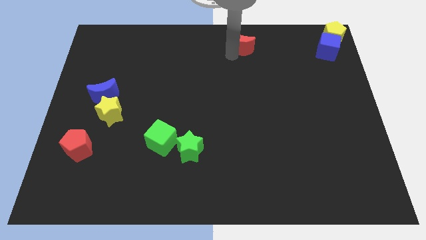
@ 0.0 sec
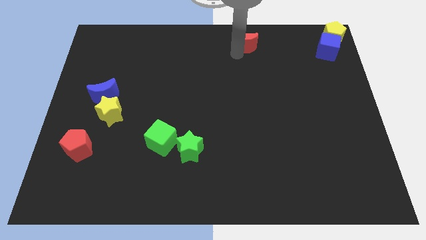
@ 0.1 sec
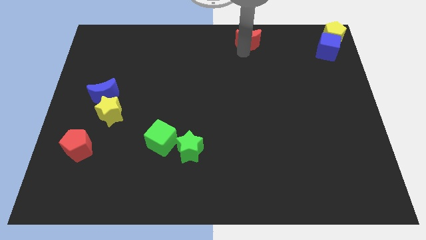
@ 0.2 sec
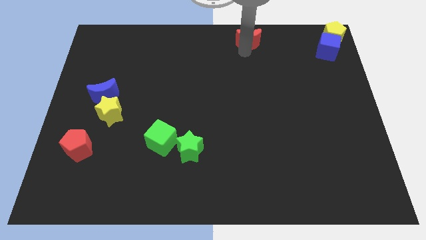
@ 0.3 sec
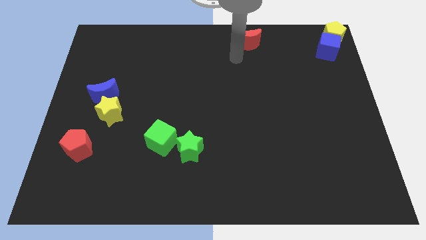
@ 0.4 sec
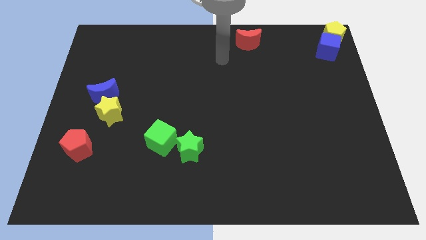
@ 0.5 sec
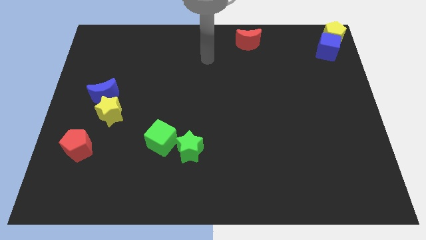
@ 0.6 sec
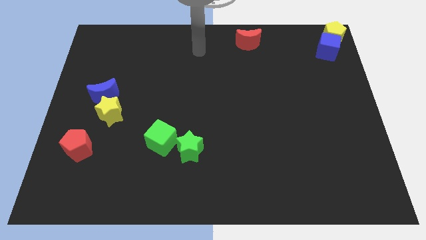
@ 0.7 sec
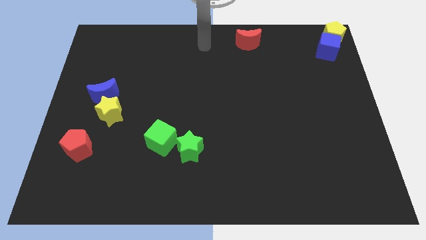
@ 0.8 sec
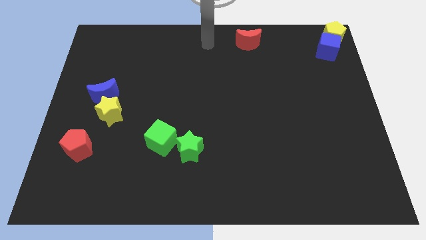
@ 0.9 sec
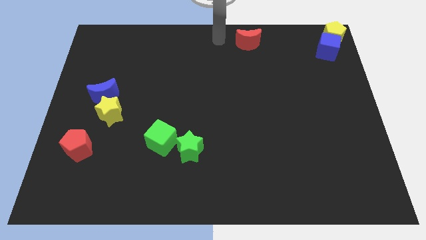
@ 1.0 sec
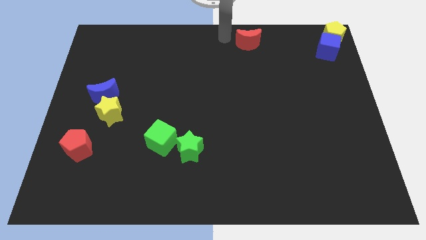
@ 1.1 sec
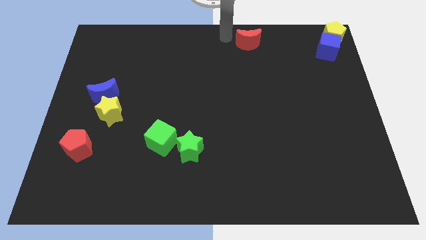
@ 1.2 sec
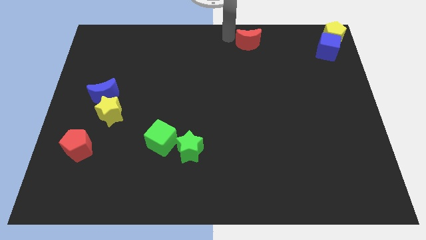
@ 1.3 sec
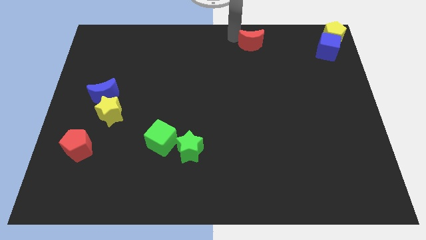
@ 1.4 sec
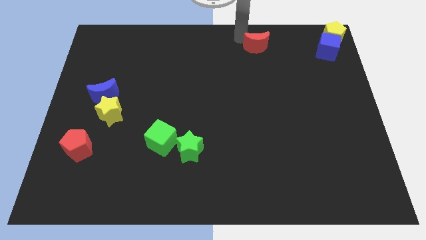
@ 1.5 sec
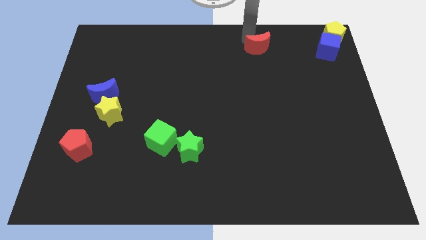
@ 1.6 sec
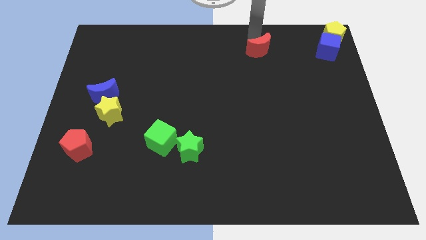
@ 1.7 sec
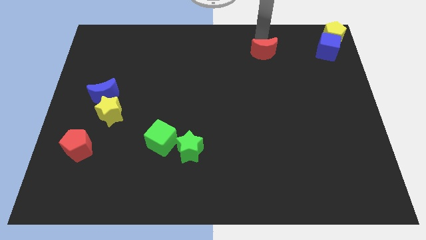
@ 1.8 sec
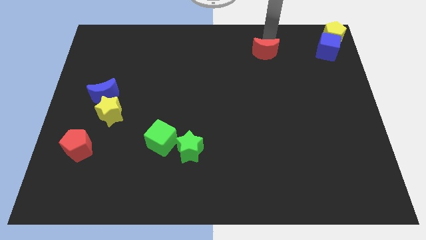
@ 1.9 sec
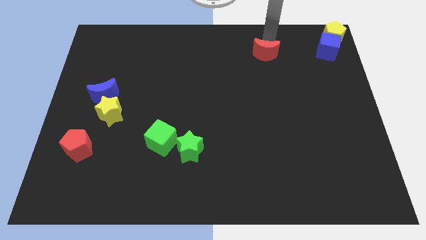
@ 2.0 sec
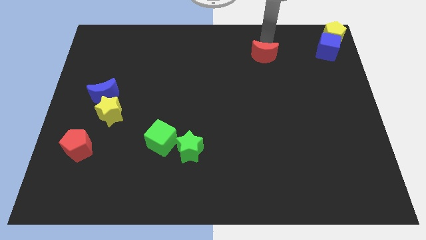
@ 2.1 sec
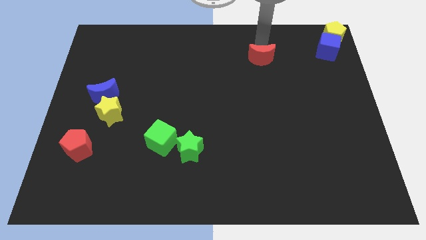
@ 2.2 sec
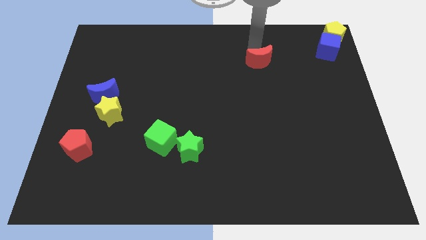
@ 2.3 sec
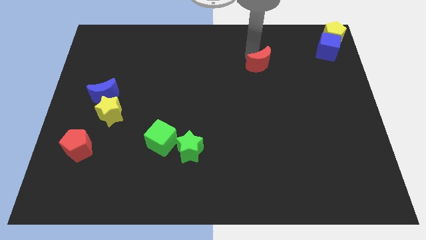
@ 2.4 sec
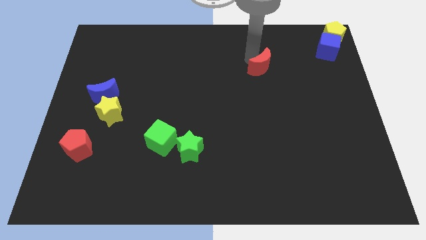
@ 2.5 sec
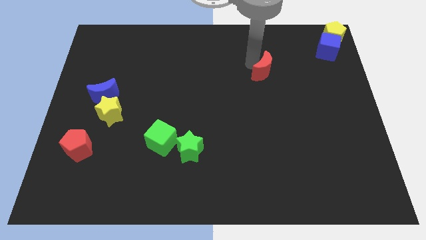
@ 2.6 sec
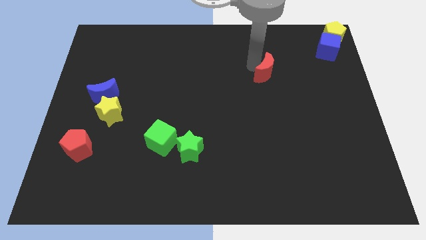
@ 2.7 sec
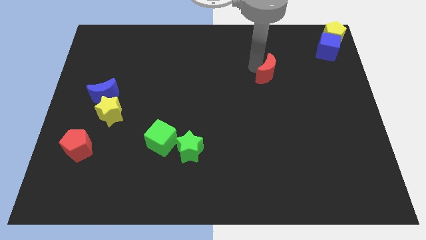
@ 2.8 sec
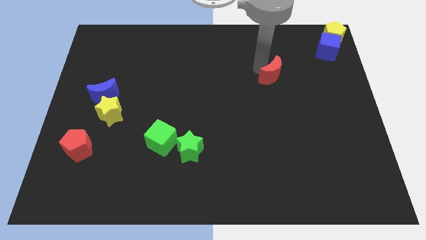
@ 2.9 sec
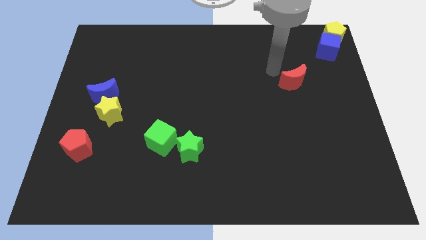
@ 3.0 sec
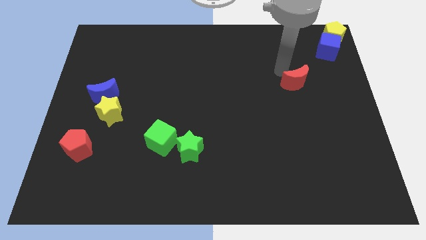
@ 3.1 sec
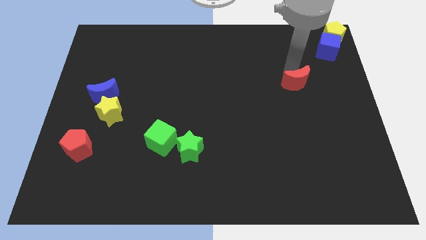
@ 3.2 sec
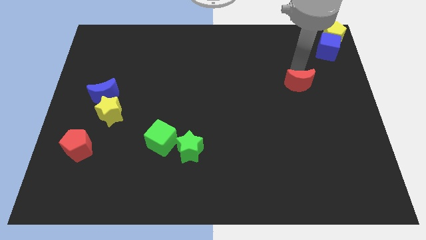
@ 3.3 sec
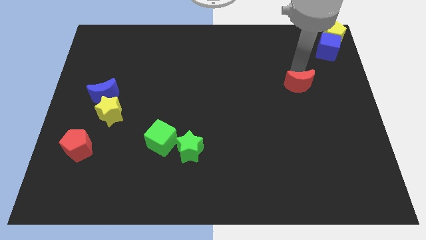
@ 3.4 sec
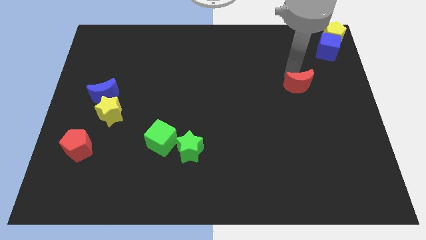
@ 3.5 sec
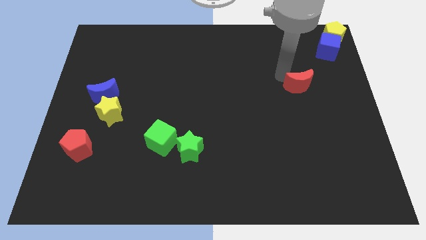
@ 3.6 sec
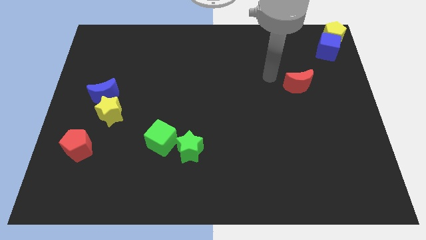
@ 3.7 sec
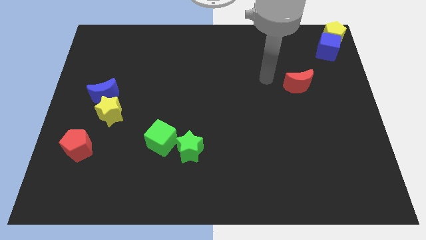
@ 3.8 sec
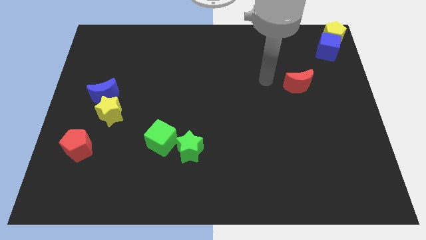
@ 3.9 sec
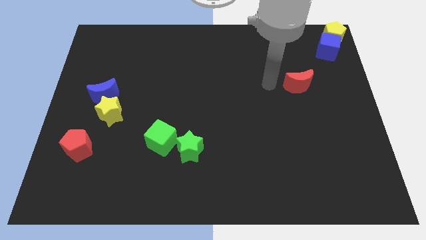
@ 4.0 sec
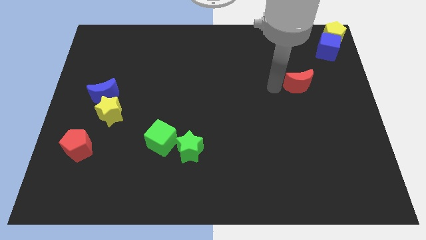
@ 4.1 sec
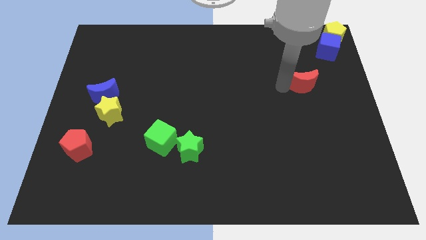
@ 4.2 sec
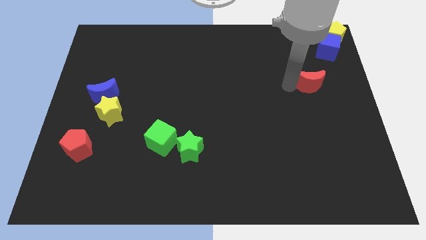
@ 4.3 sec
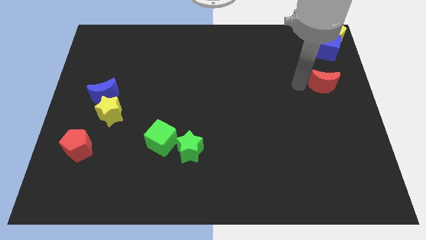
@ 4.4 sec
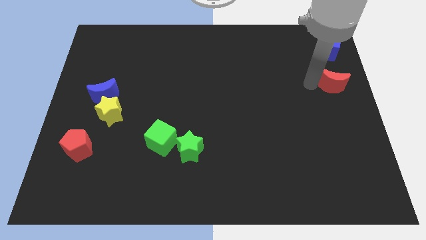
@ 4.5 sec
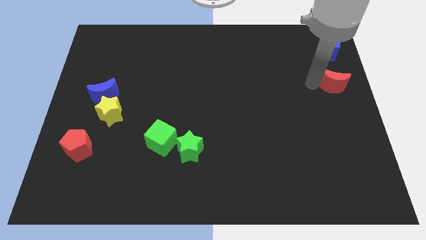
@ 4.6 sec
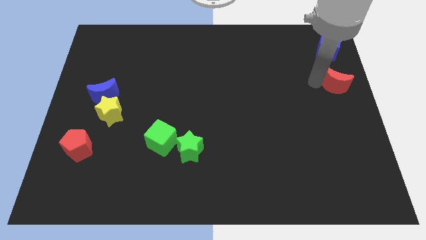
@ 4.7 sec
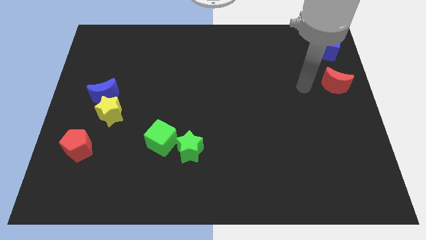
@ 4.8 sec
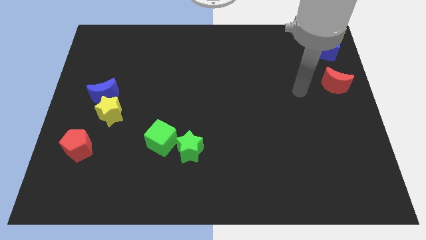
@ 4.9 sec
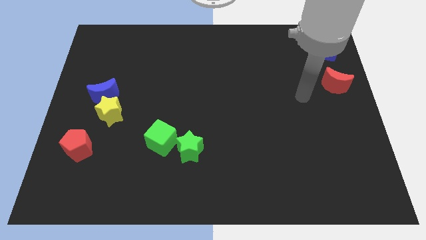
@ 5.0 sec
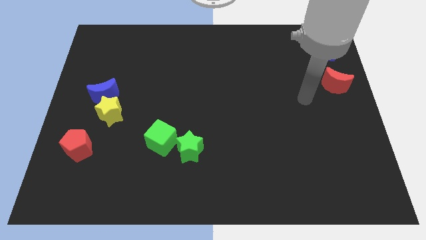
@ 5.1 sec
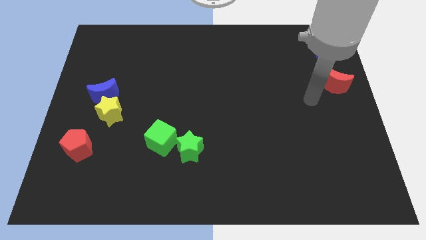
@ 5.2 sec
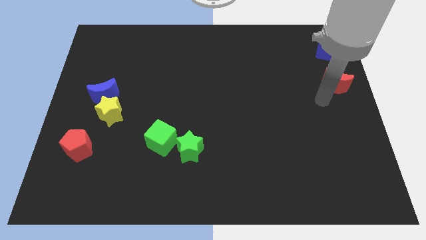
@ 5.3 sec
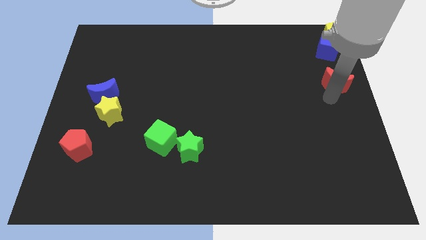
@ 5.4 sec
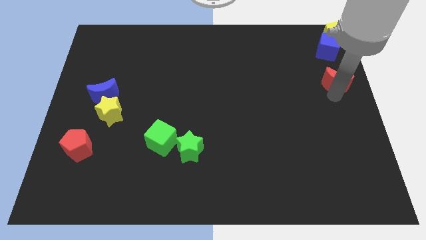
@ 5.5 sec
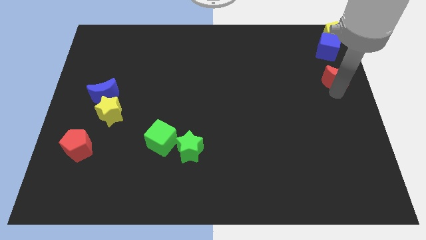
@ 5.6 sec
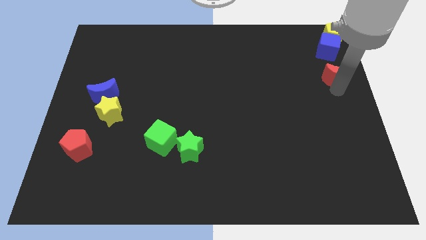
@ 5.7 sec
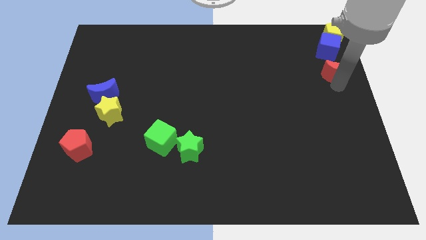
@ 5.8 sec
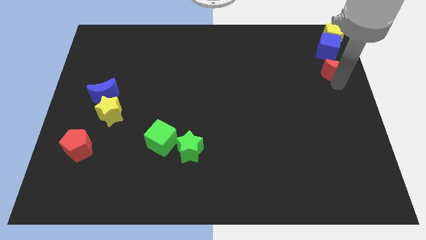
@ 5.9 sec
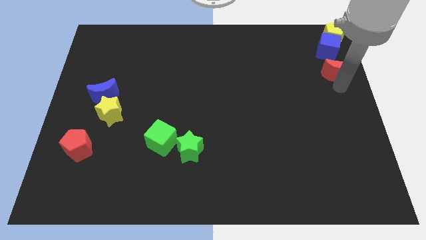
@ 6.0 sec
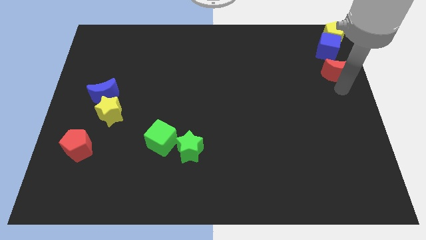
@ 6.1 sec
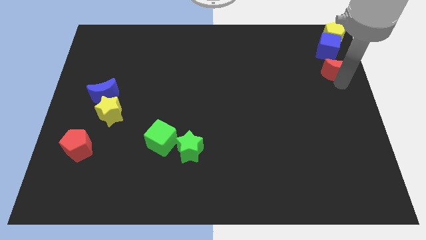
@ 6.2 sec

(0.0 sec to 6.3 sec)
place the red crescent below the blue cube

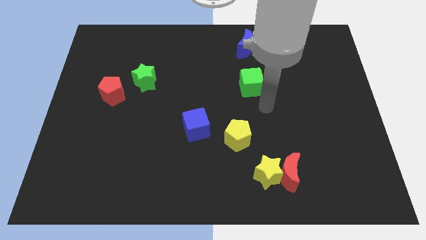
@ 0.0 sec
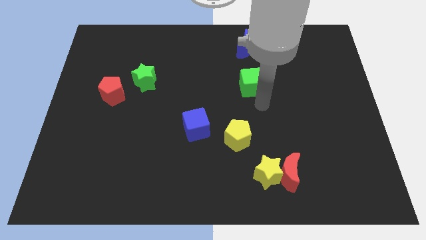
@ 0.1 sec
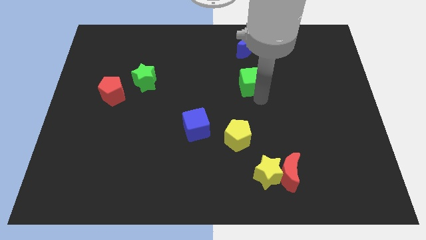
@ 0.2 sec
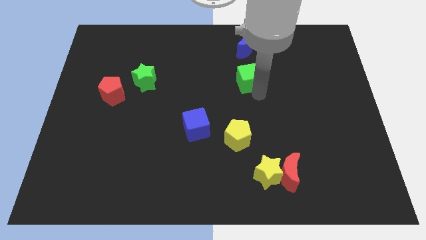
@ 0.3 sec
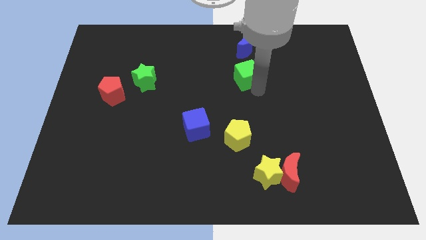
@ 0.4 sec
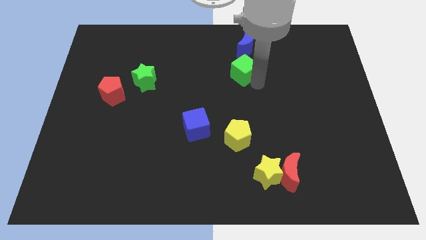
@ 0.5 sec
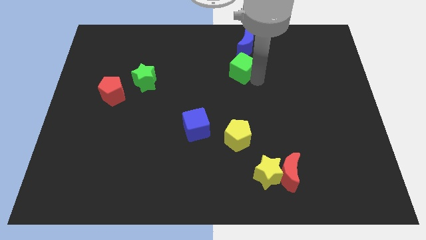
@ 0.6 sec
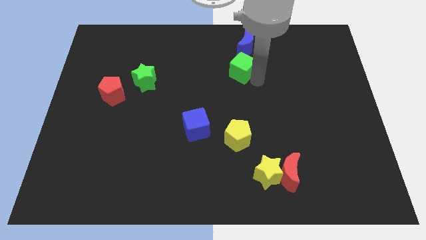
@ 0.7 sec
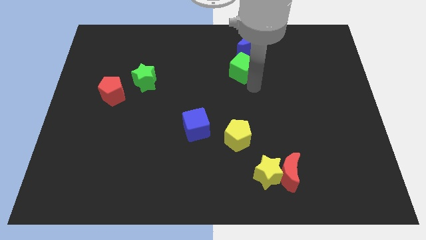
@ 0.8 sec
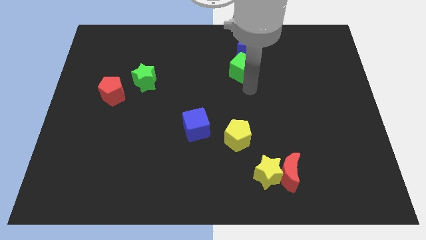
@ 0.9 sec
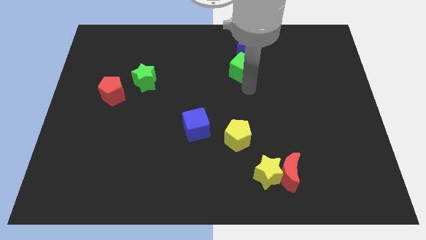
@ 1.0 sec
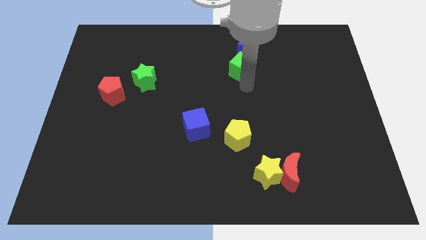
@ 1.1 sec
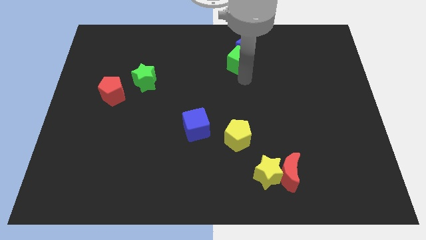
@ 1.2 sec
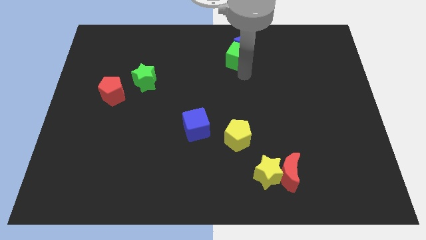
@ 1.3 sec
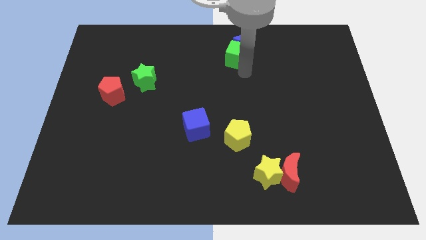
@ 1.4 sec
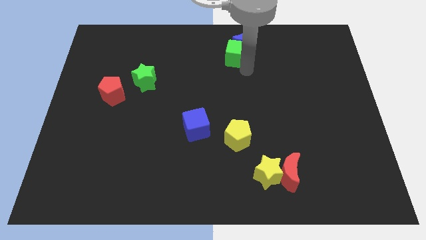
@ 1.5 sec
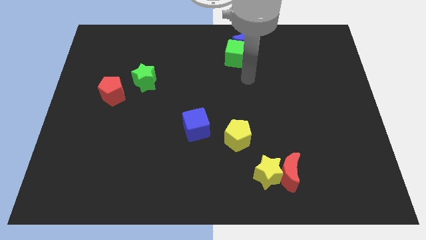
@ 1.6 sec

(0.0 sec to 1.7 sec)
push the green cube and blue crescent towards the top

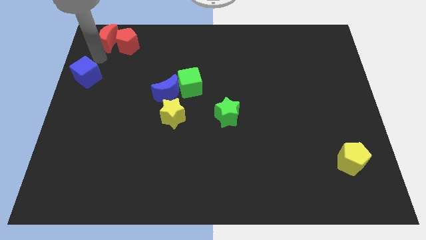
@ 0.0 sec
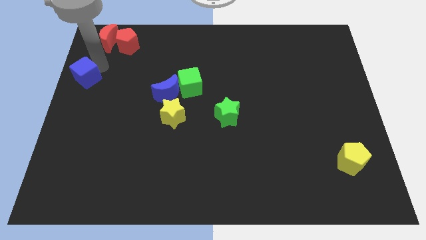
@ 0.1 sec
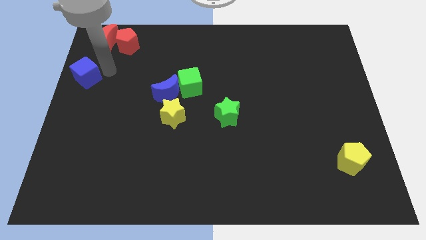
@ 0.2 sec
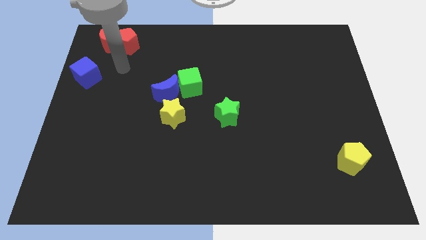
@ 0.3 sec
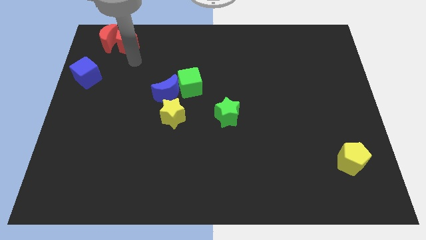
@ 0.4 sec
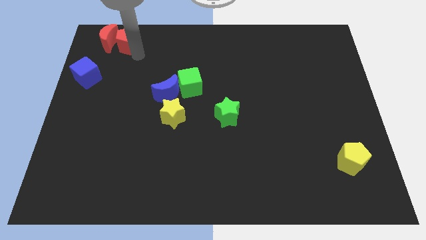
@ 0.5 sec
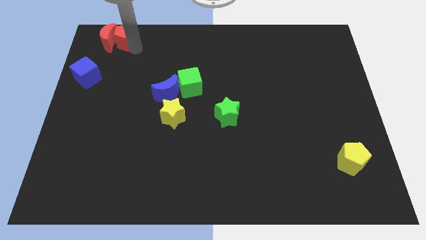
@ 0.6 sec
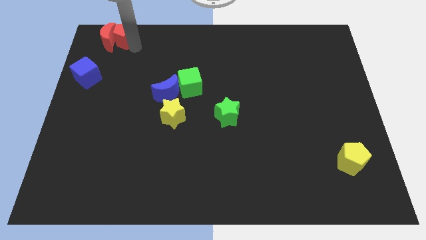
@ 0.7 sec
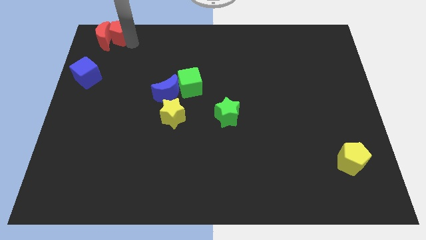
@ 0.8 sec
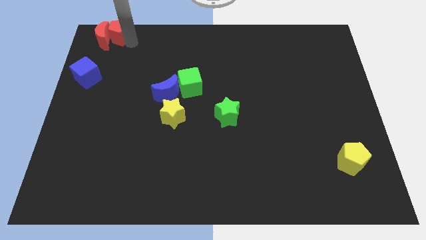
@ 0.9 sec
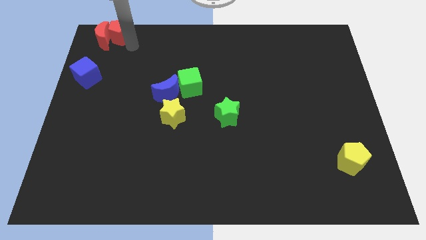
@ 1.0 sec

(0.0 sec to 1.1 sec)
move red blocks to the top of the blue cube
